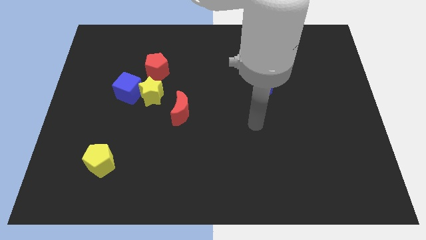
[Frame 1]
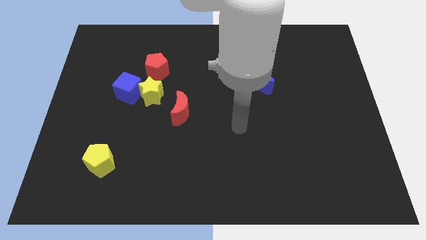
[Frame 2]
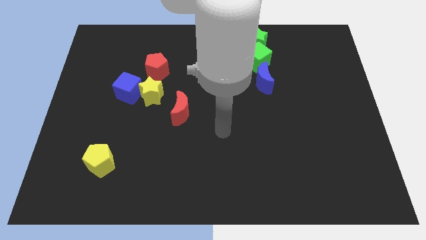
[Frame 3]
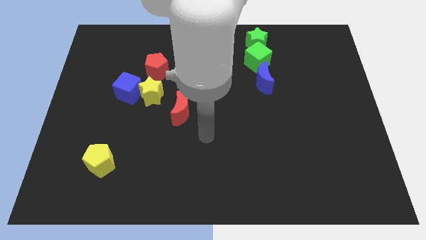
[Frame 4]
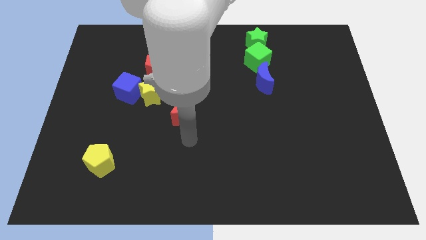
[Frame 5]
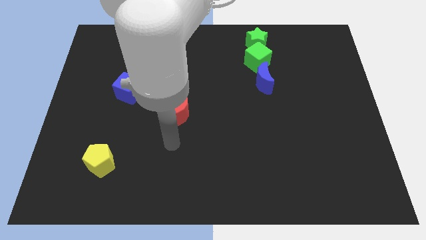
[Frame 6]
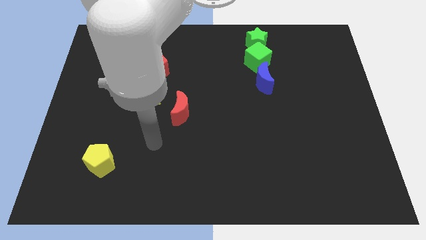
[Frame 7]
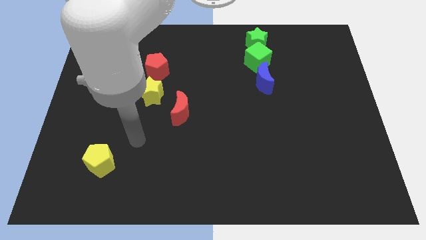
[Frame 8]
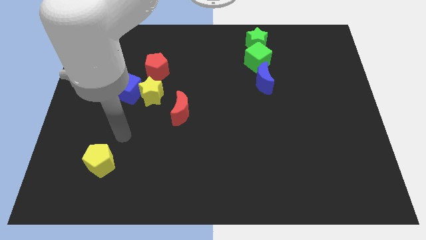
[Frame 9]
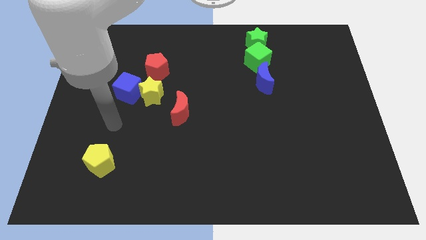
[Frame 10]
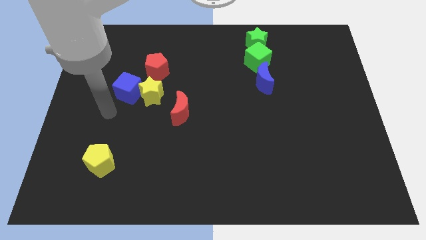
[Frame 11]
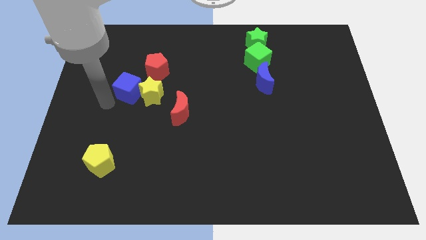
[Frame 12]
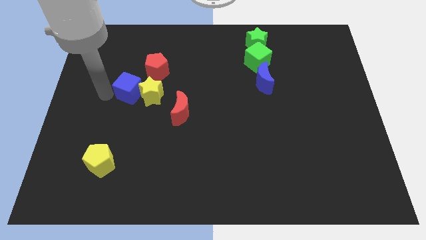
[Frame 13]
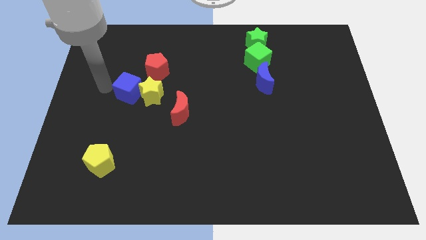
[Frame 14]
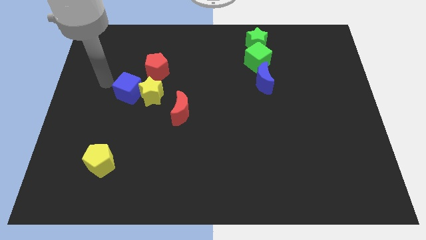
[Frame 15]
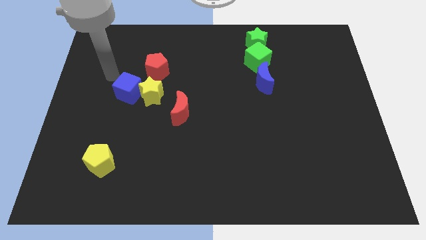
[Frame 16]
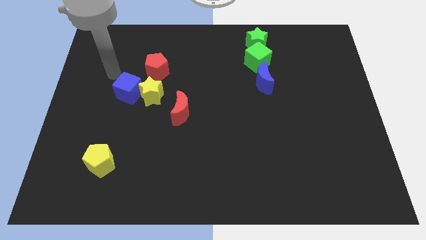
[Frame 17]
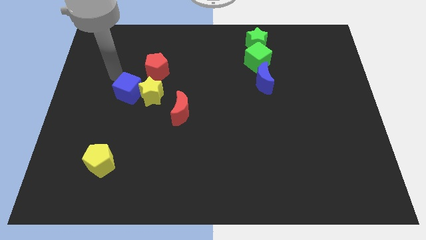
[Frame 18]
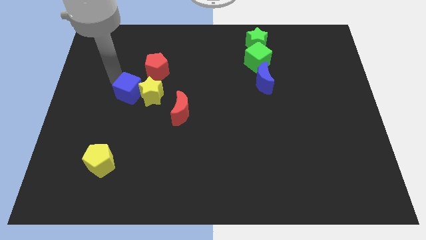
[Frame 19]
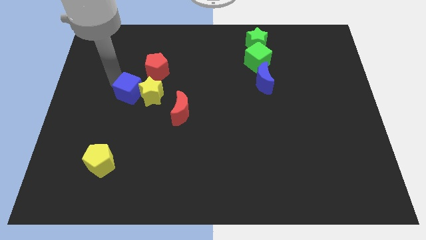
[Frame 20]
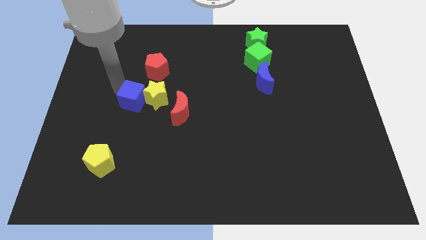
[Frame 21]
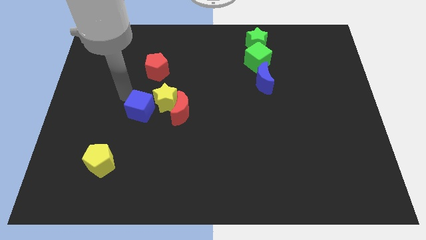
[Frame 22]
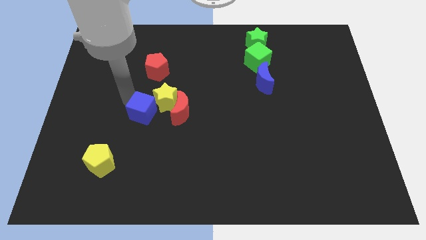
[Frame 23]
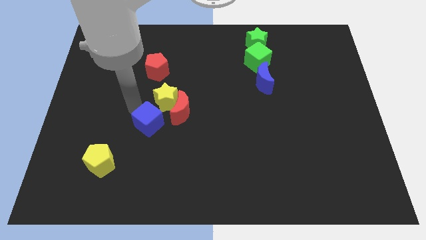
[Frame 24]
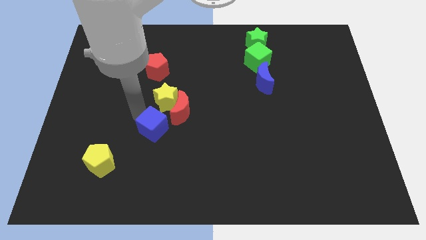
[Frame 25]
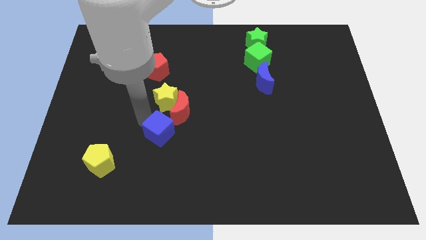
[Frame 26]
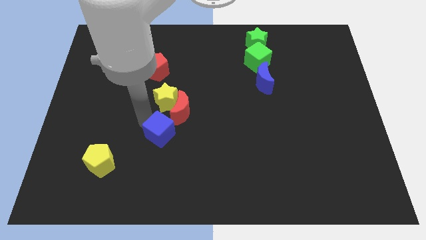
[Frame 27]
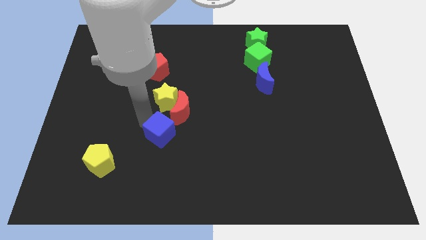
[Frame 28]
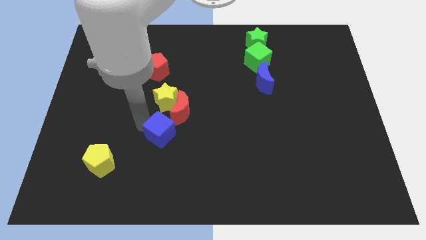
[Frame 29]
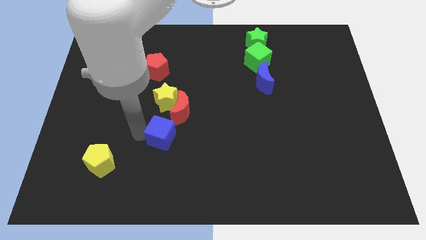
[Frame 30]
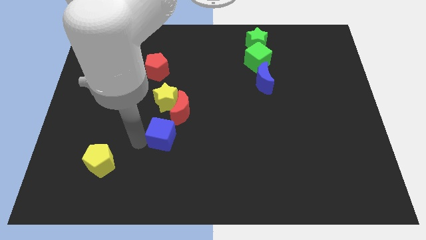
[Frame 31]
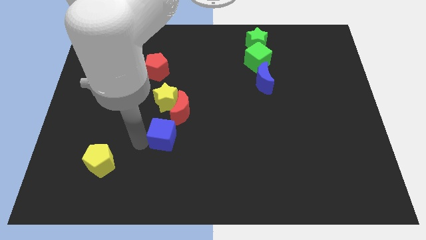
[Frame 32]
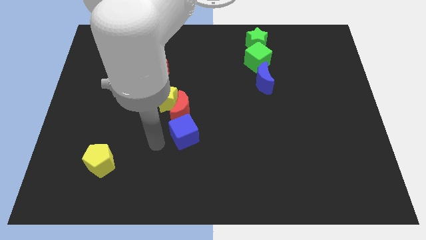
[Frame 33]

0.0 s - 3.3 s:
place the blue cube below the red crescent

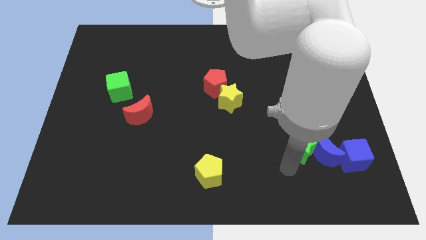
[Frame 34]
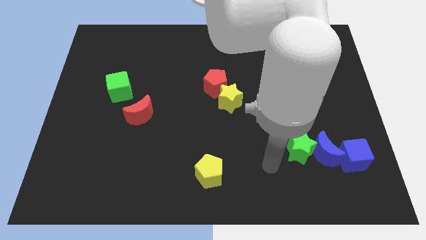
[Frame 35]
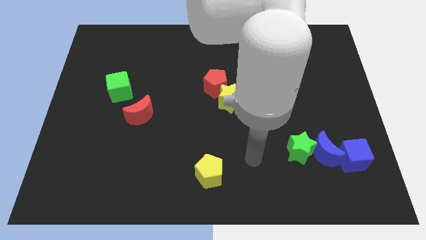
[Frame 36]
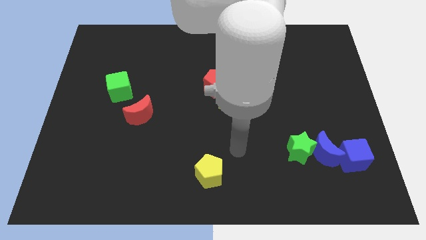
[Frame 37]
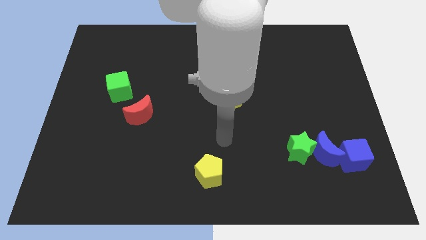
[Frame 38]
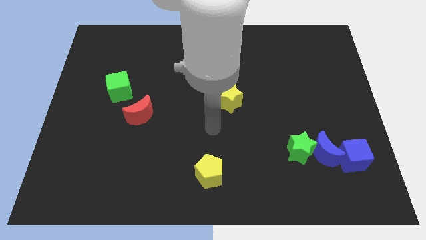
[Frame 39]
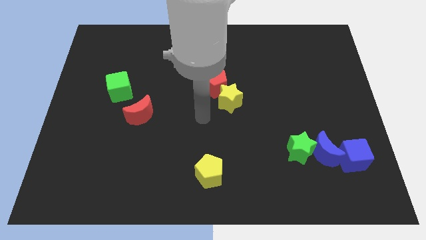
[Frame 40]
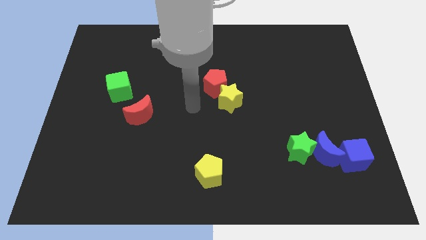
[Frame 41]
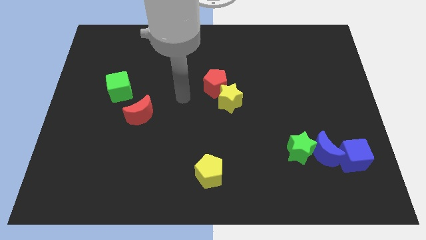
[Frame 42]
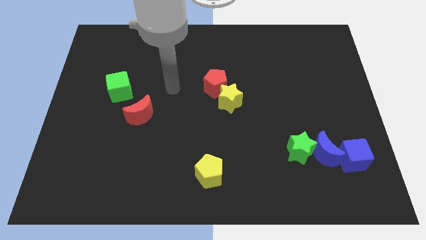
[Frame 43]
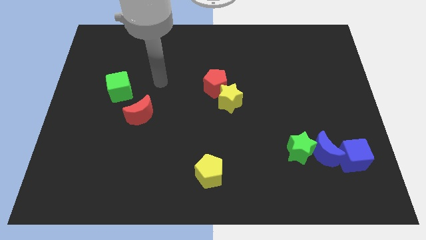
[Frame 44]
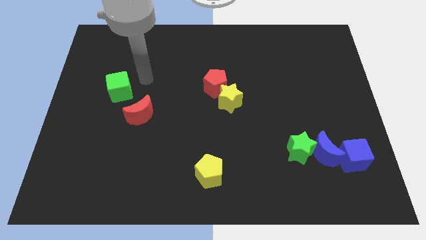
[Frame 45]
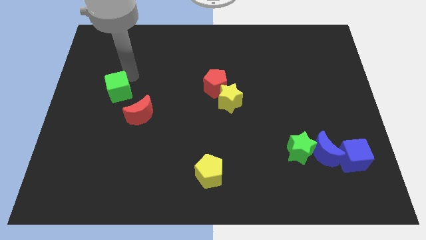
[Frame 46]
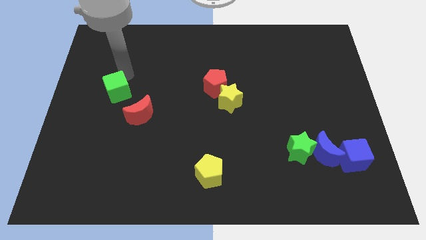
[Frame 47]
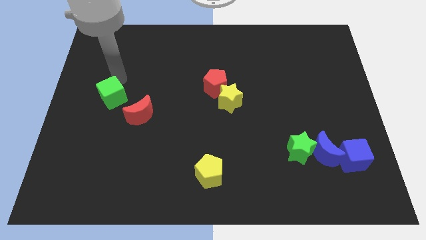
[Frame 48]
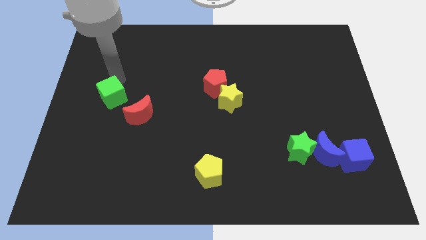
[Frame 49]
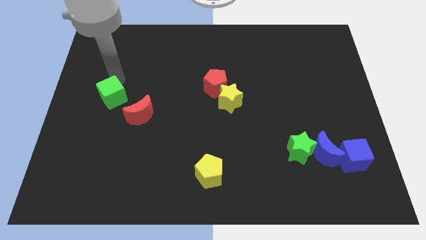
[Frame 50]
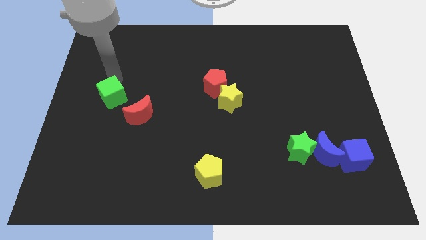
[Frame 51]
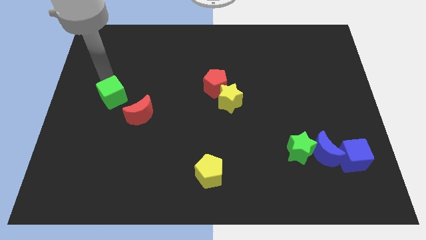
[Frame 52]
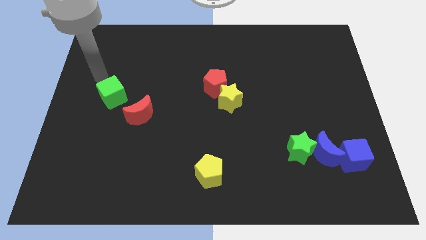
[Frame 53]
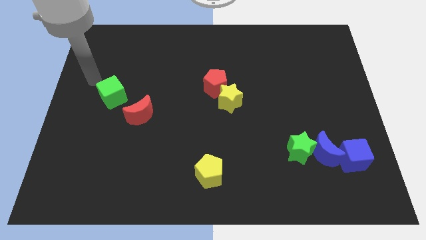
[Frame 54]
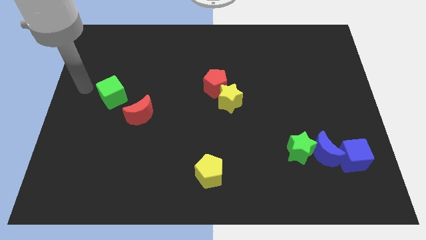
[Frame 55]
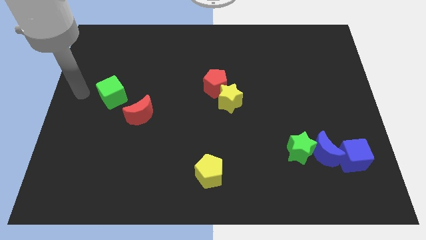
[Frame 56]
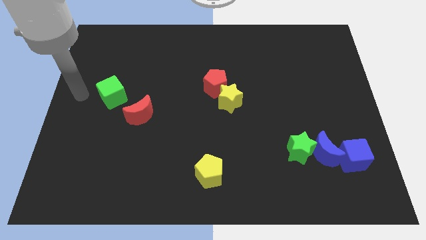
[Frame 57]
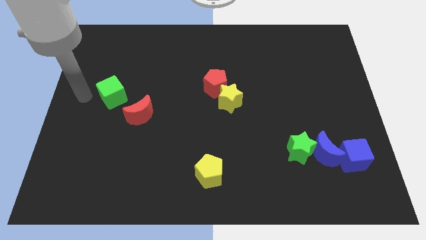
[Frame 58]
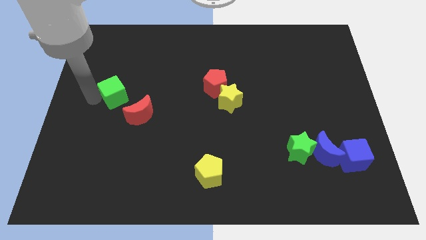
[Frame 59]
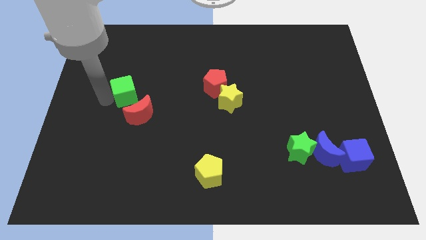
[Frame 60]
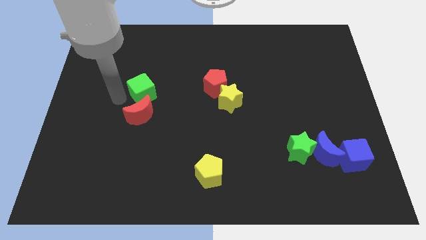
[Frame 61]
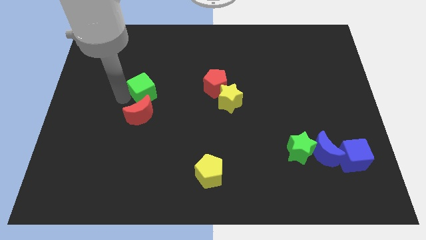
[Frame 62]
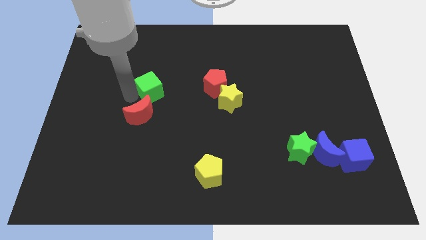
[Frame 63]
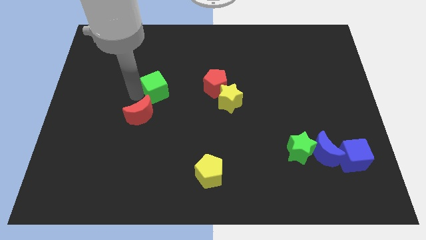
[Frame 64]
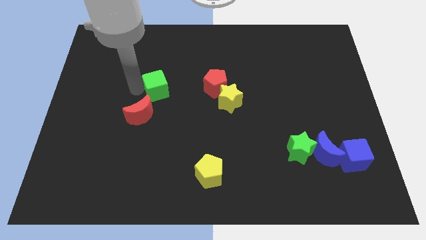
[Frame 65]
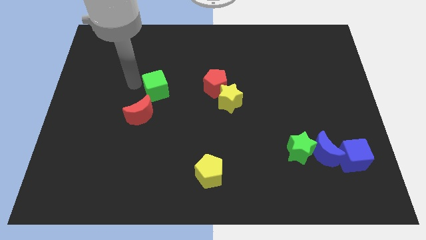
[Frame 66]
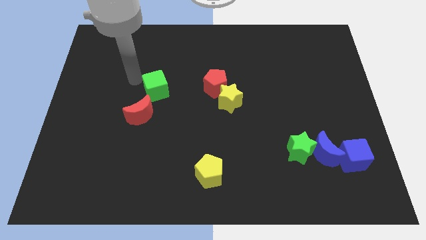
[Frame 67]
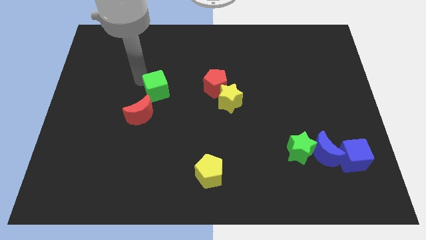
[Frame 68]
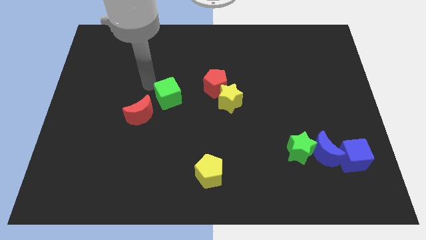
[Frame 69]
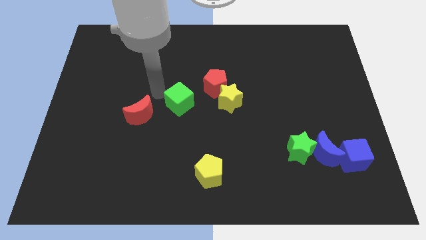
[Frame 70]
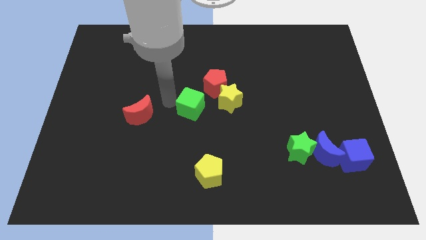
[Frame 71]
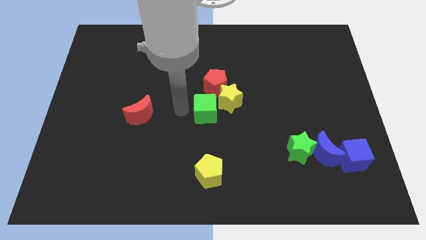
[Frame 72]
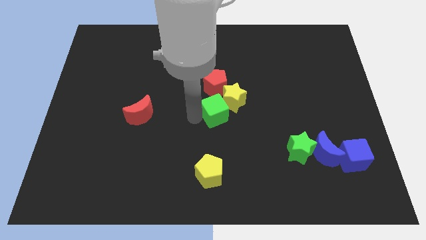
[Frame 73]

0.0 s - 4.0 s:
place the green cube left to the yellow star

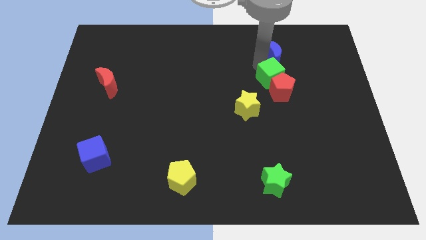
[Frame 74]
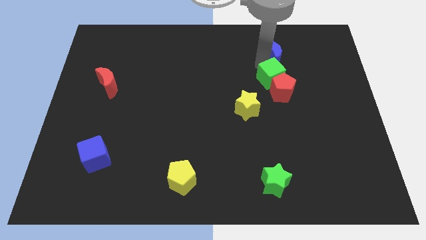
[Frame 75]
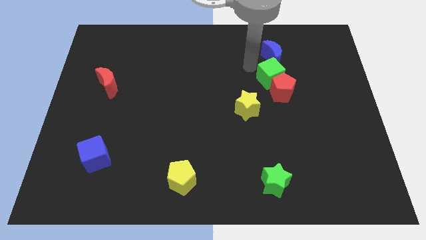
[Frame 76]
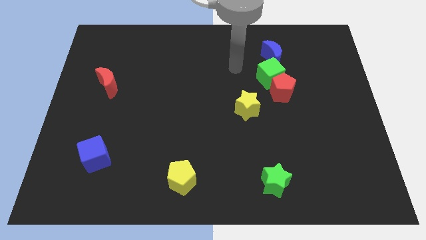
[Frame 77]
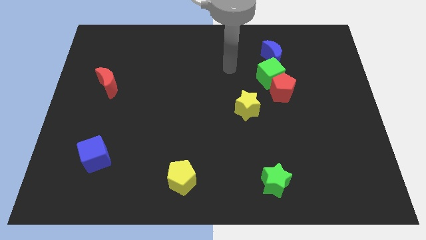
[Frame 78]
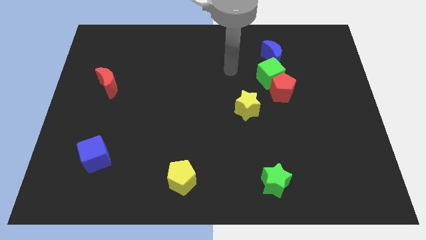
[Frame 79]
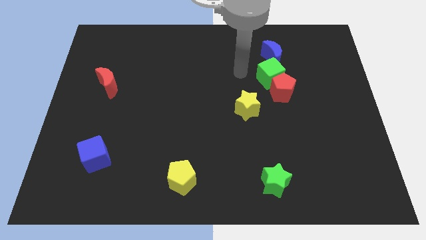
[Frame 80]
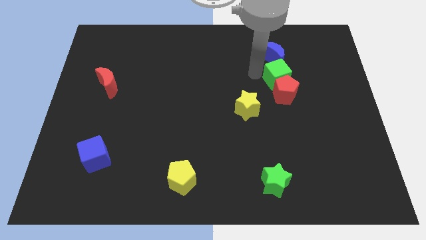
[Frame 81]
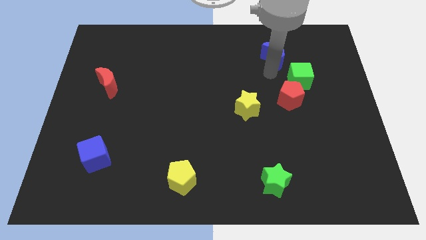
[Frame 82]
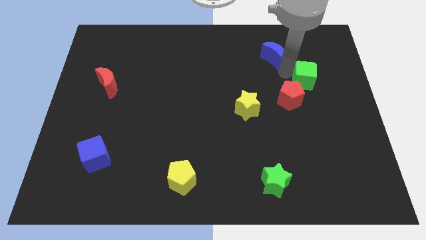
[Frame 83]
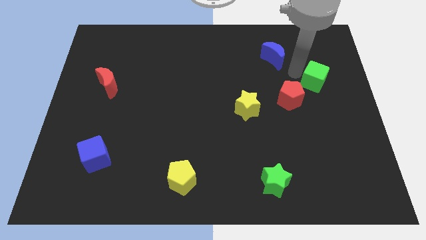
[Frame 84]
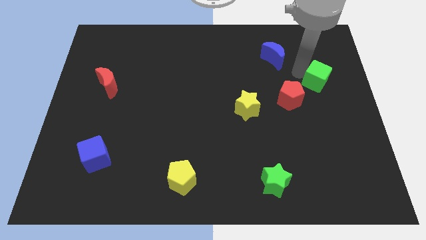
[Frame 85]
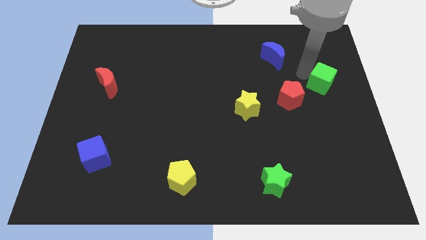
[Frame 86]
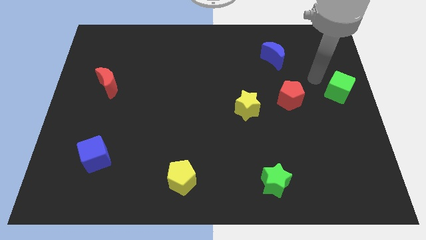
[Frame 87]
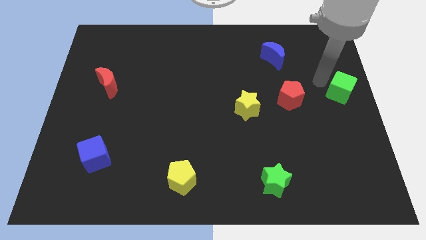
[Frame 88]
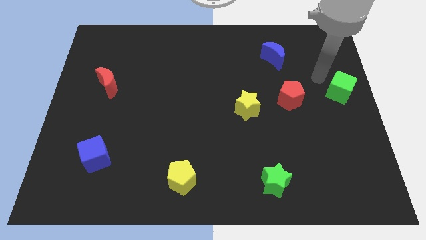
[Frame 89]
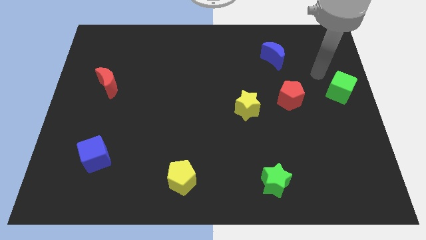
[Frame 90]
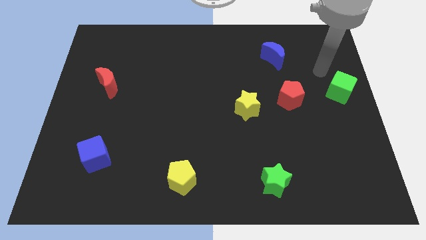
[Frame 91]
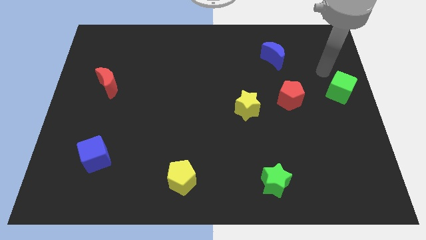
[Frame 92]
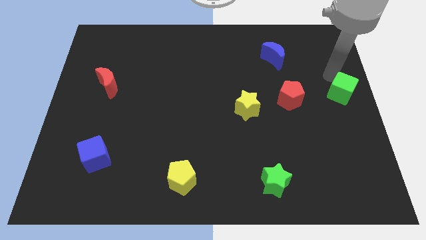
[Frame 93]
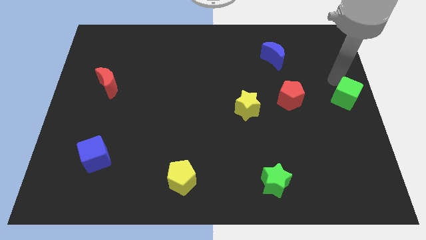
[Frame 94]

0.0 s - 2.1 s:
separate the green cube from the red pentagon
